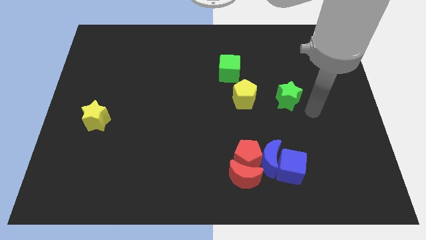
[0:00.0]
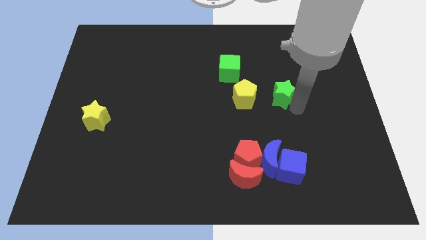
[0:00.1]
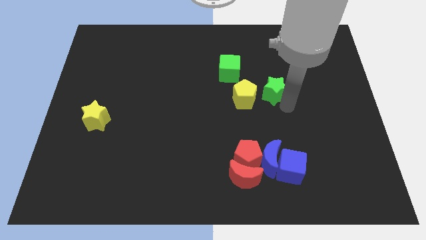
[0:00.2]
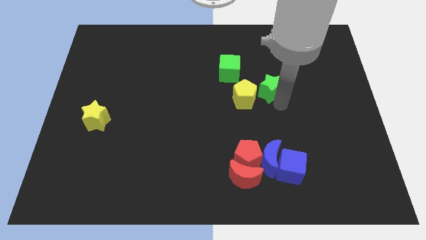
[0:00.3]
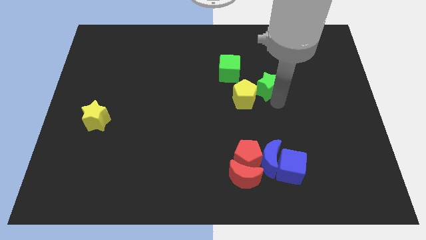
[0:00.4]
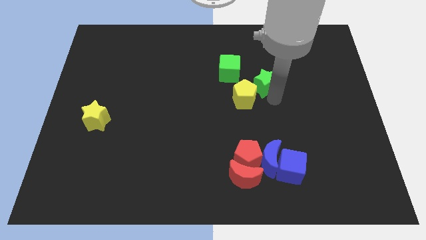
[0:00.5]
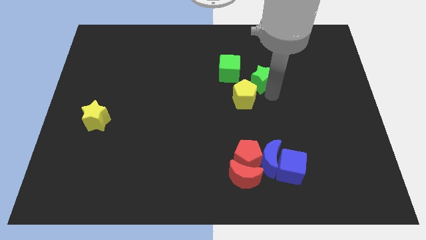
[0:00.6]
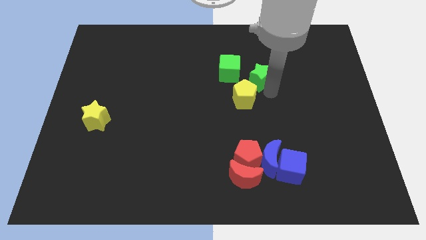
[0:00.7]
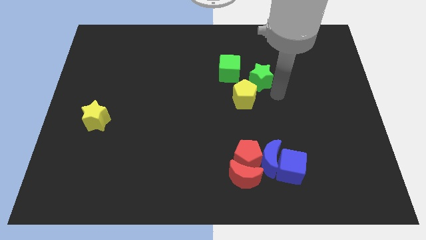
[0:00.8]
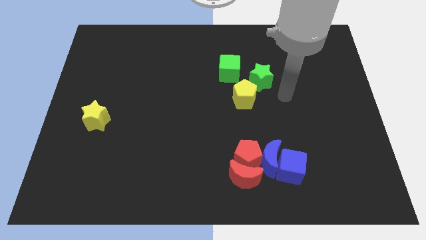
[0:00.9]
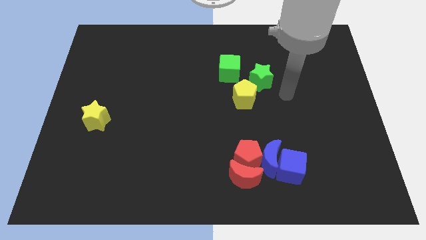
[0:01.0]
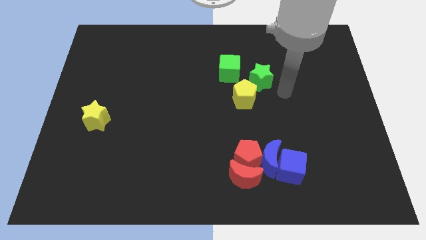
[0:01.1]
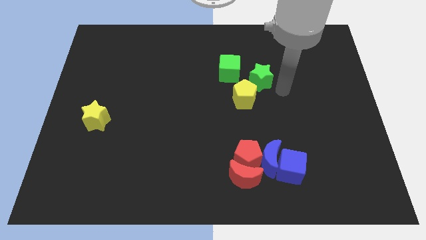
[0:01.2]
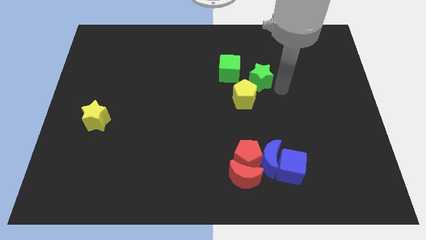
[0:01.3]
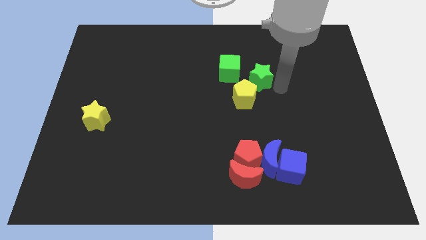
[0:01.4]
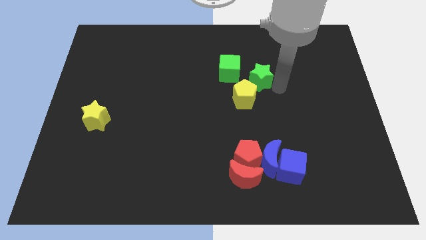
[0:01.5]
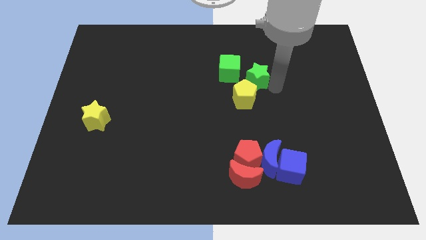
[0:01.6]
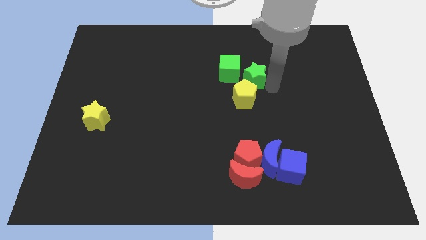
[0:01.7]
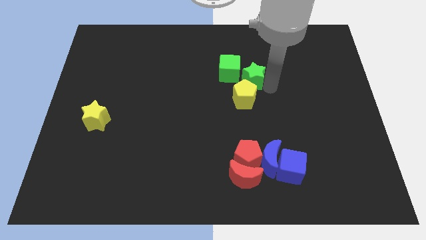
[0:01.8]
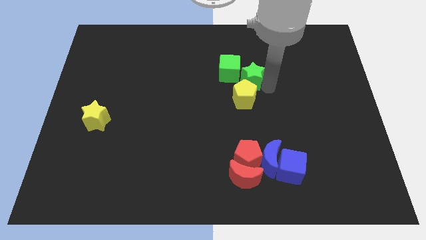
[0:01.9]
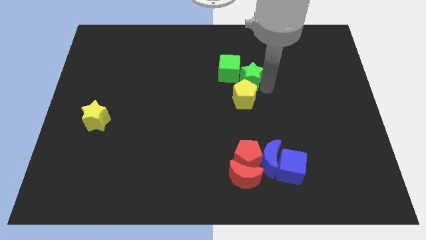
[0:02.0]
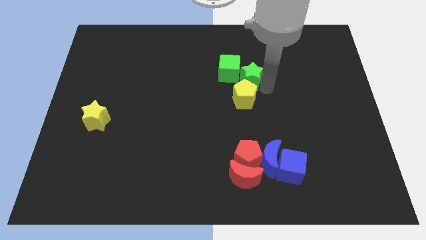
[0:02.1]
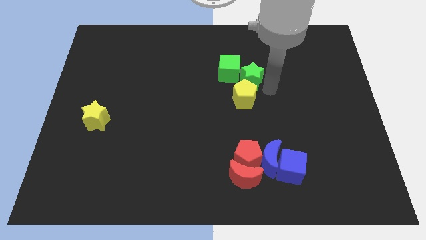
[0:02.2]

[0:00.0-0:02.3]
push the green star to the top of the yellow pentagon

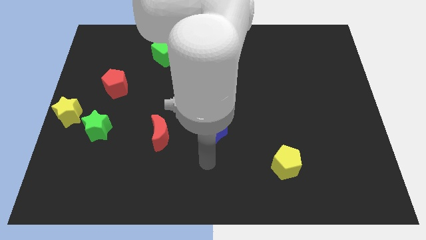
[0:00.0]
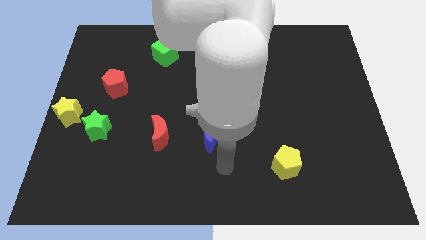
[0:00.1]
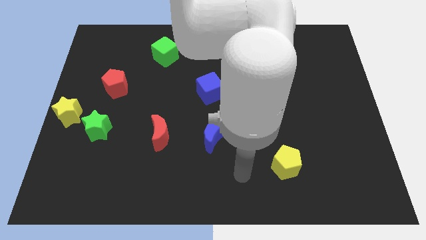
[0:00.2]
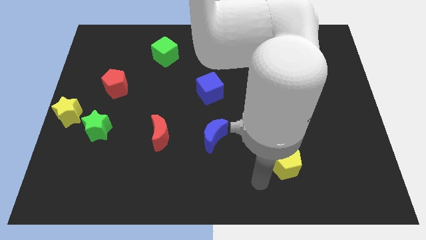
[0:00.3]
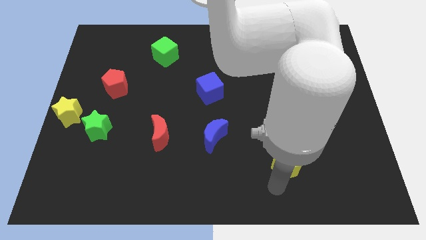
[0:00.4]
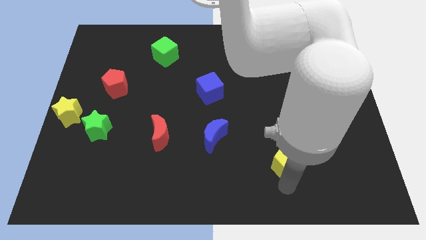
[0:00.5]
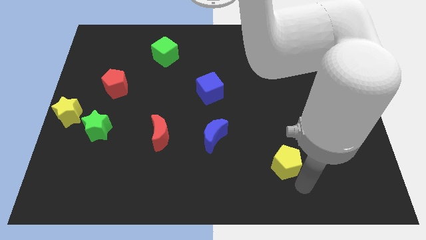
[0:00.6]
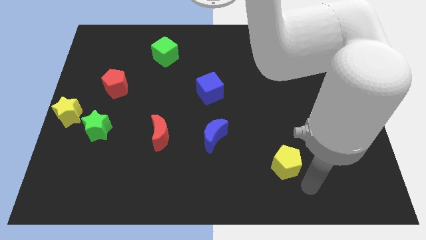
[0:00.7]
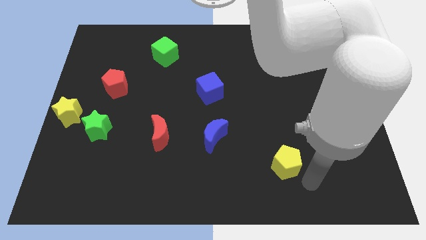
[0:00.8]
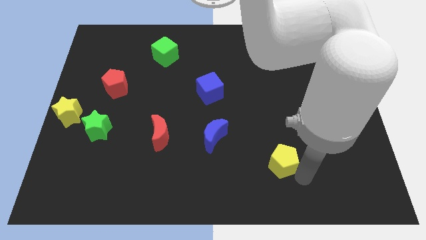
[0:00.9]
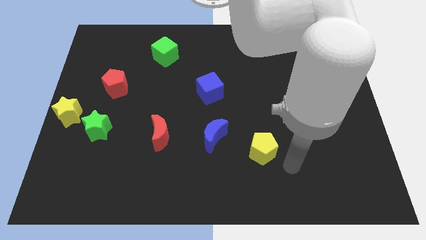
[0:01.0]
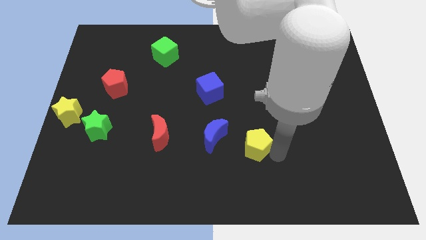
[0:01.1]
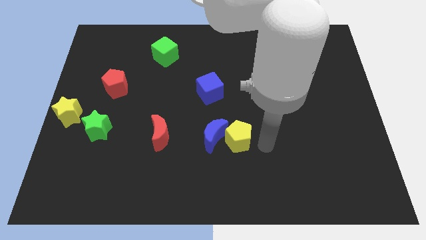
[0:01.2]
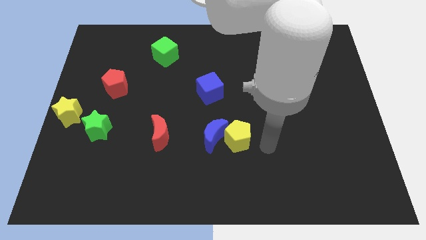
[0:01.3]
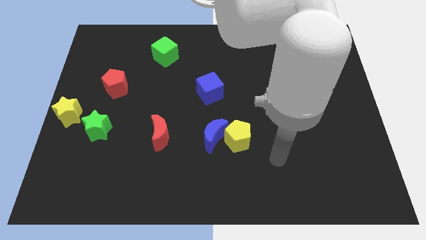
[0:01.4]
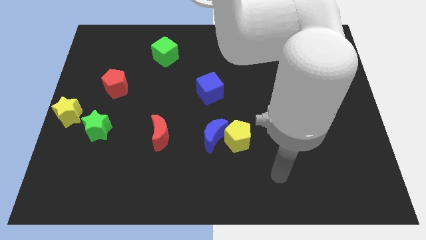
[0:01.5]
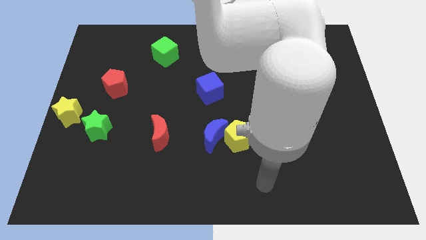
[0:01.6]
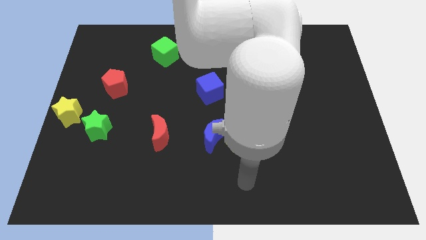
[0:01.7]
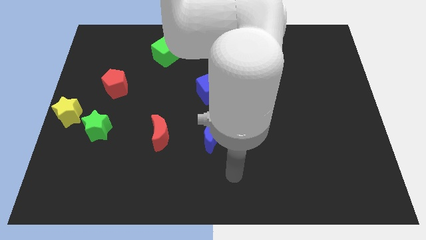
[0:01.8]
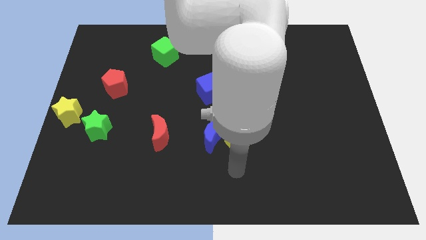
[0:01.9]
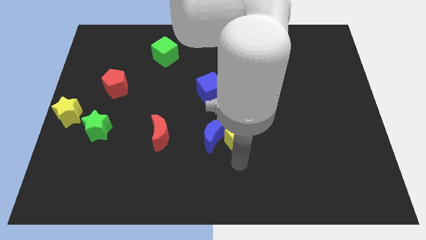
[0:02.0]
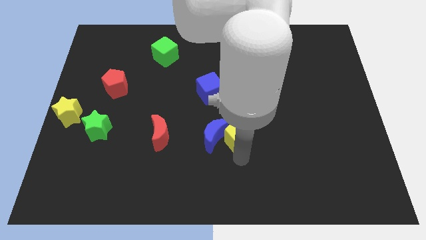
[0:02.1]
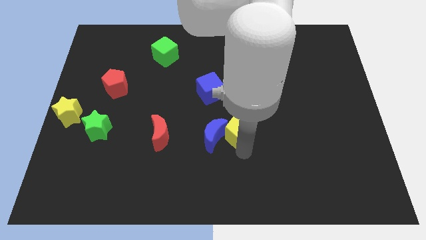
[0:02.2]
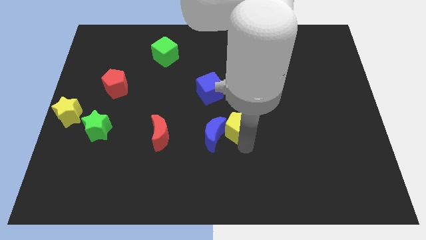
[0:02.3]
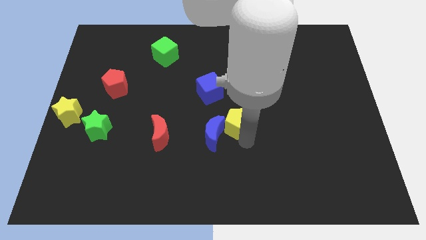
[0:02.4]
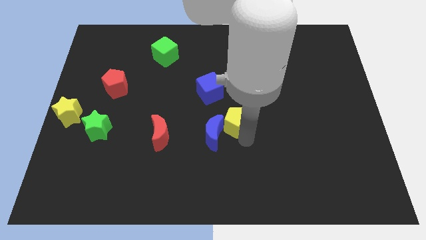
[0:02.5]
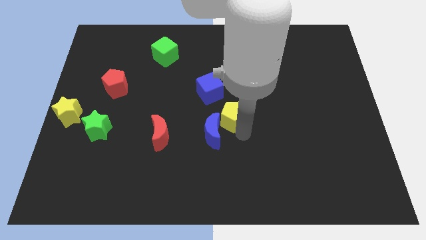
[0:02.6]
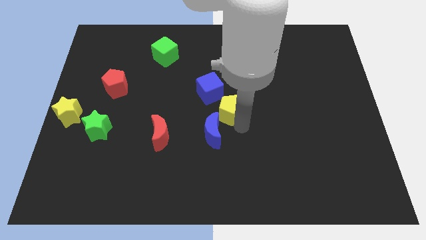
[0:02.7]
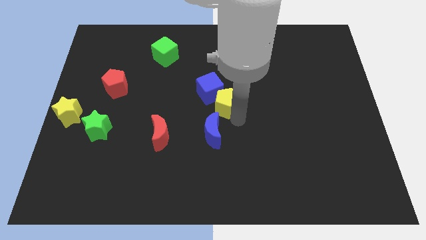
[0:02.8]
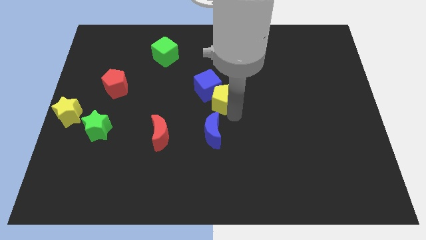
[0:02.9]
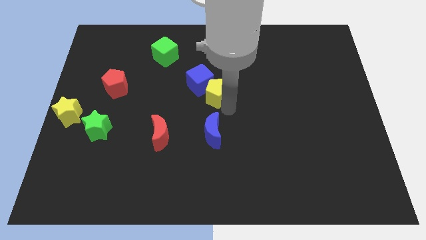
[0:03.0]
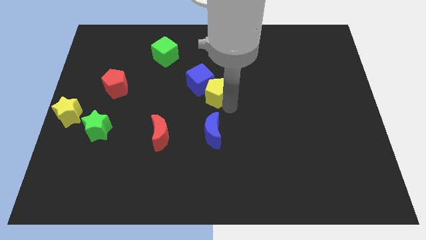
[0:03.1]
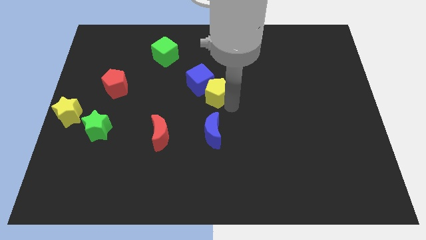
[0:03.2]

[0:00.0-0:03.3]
move the yellow pentagon to the top of the blue crescent

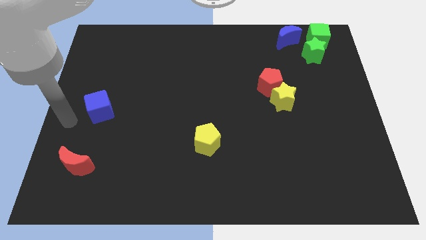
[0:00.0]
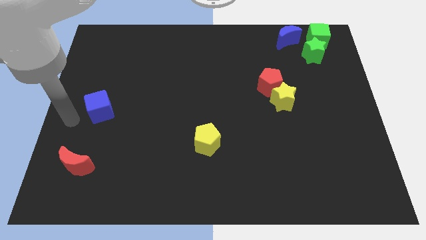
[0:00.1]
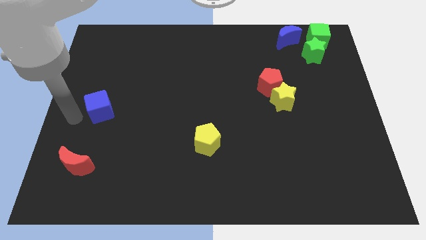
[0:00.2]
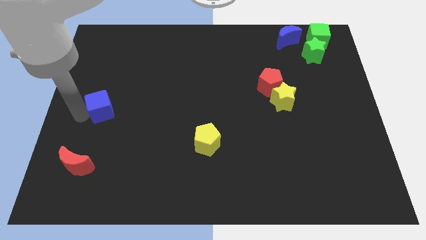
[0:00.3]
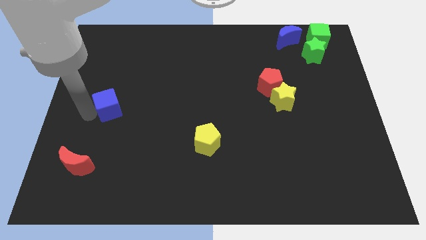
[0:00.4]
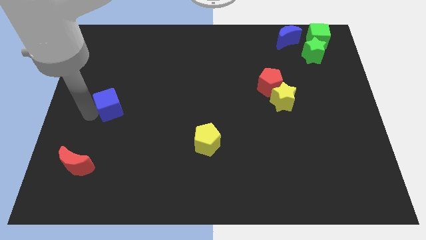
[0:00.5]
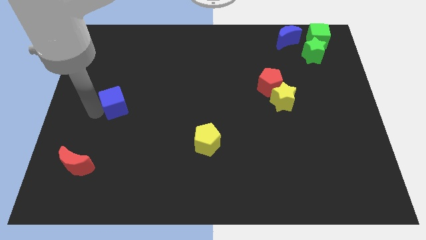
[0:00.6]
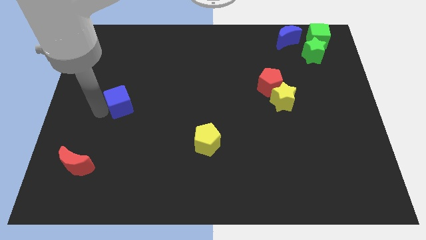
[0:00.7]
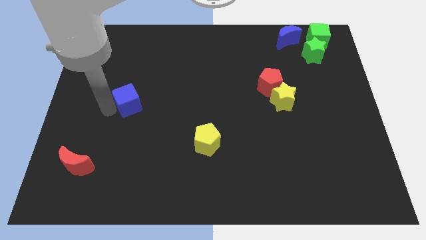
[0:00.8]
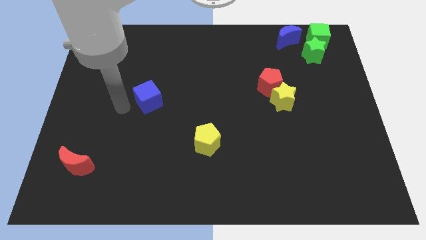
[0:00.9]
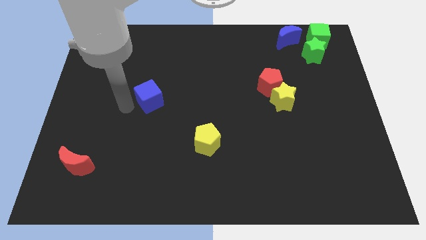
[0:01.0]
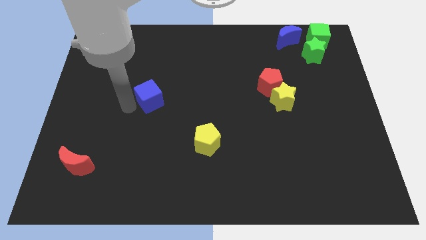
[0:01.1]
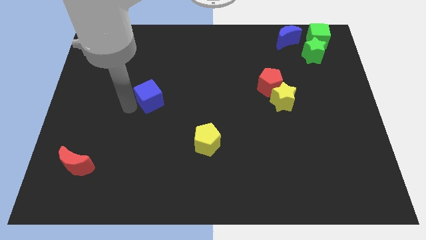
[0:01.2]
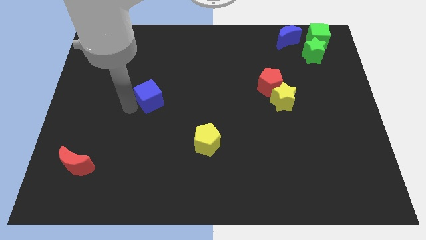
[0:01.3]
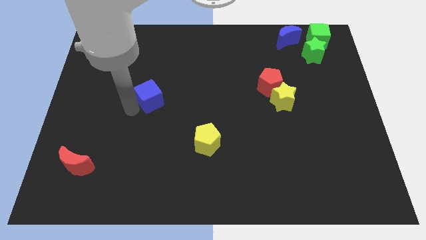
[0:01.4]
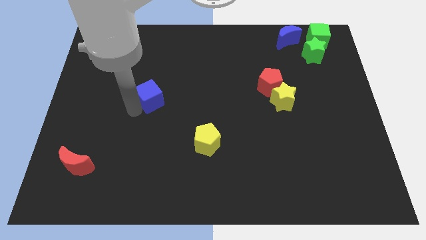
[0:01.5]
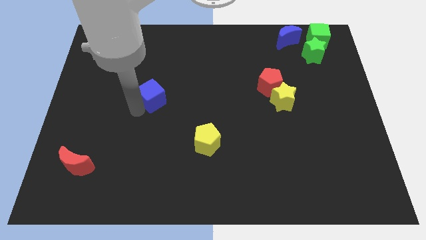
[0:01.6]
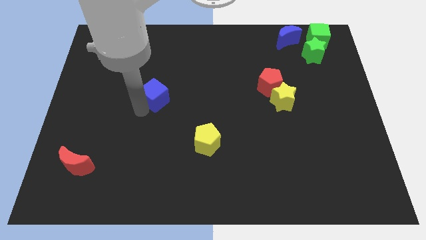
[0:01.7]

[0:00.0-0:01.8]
push the blue cube towards the blue crescent

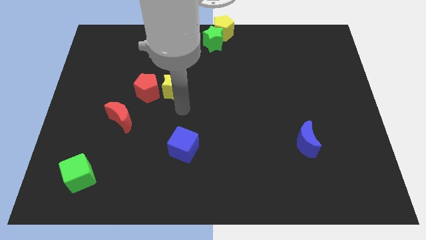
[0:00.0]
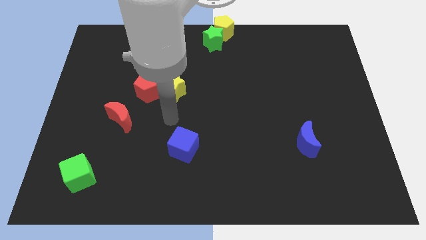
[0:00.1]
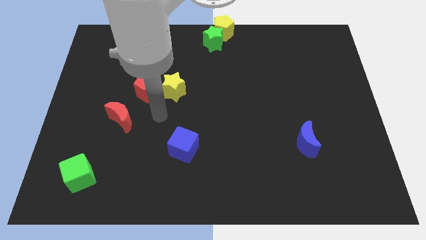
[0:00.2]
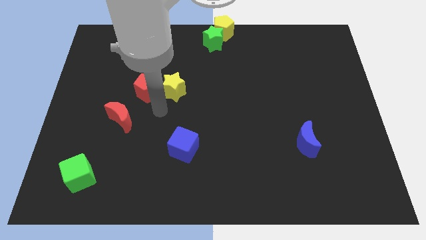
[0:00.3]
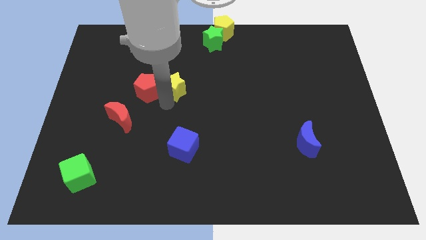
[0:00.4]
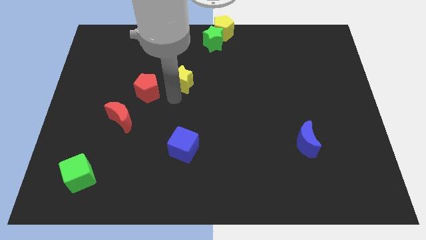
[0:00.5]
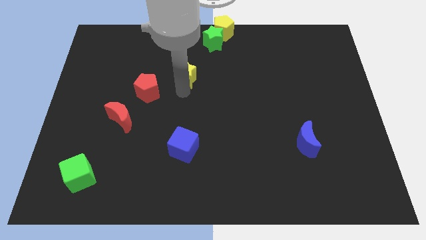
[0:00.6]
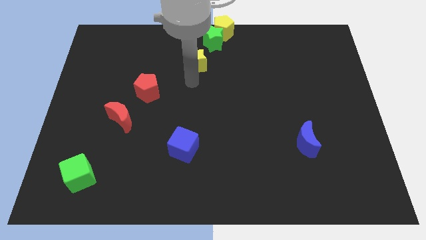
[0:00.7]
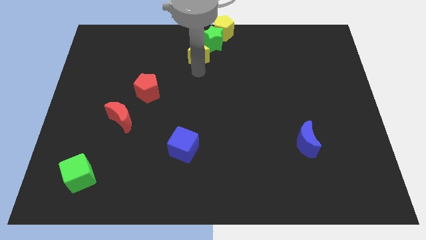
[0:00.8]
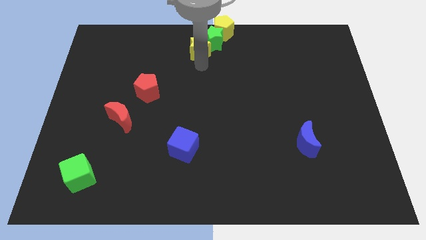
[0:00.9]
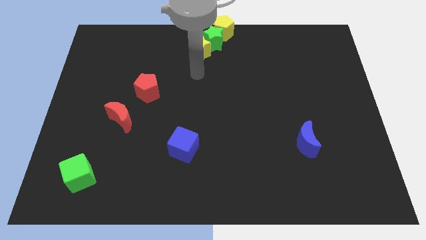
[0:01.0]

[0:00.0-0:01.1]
push the yellow star towards the green star

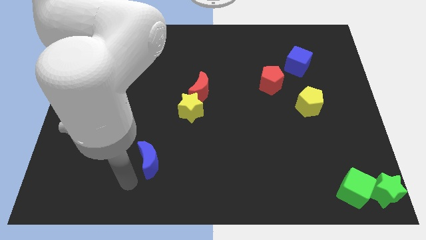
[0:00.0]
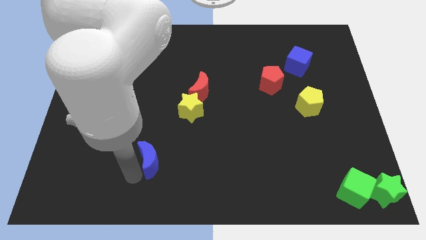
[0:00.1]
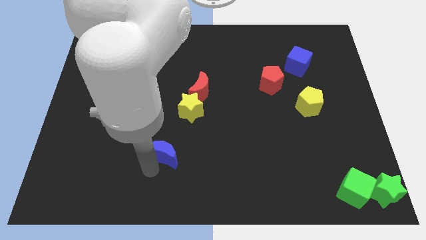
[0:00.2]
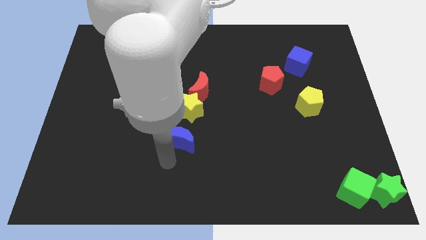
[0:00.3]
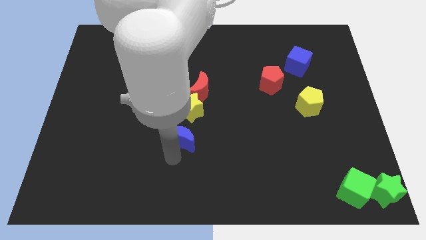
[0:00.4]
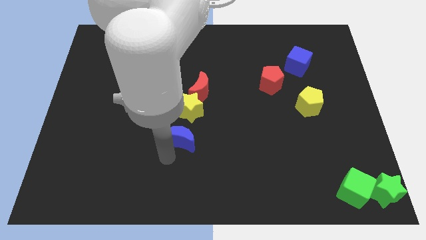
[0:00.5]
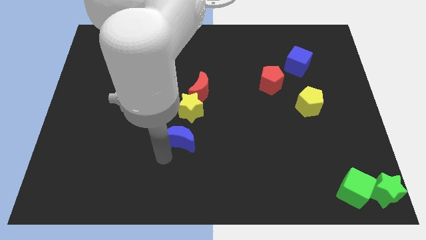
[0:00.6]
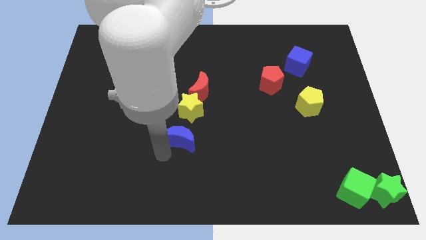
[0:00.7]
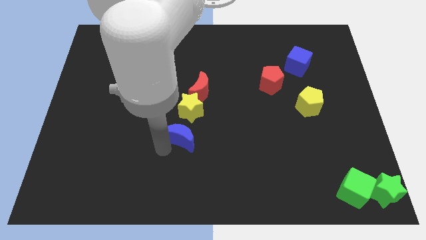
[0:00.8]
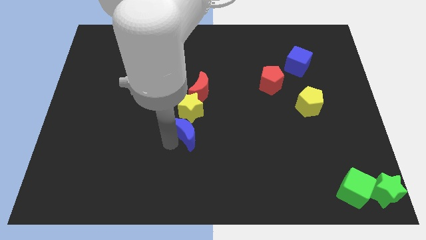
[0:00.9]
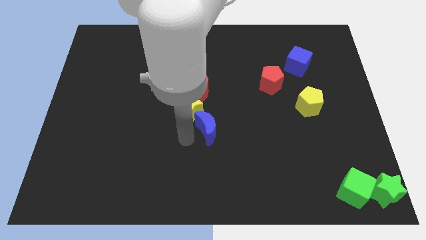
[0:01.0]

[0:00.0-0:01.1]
move the blue crescent to the bottom right of the yellow star
